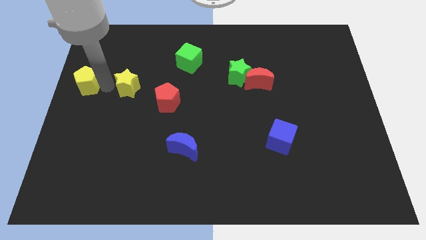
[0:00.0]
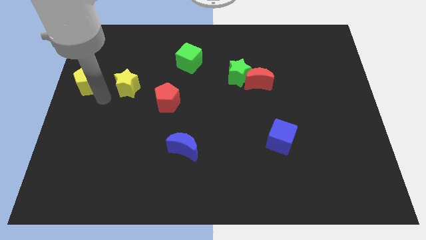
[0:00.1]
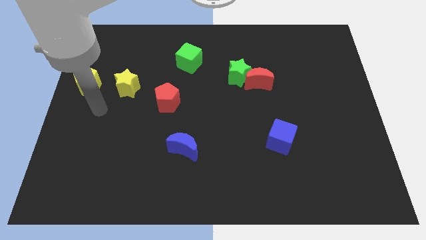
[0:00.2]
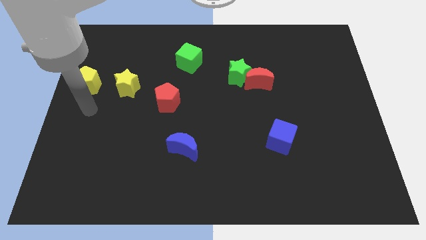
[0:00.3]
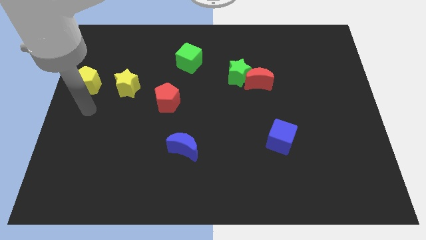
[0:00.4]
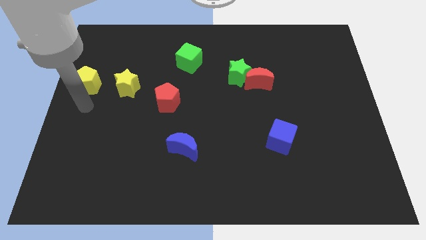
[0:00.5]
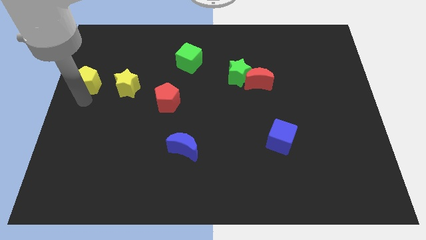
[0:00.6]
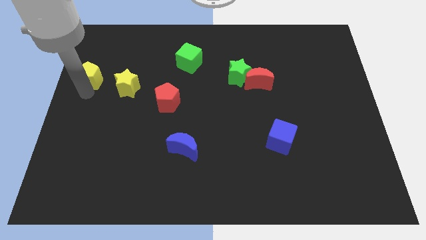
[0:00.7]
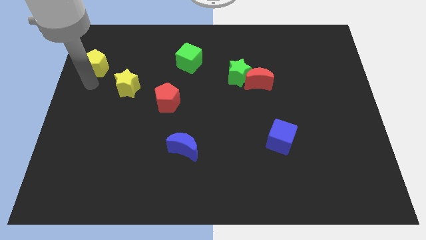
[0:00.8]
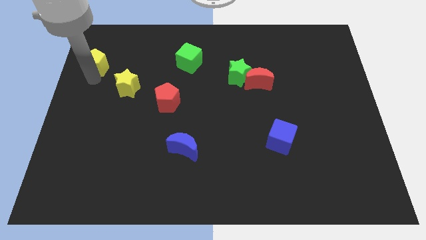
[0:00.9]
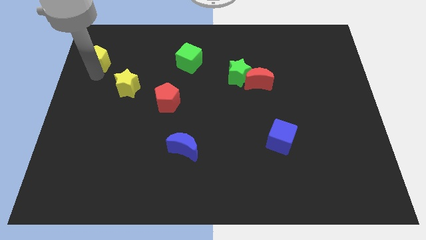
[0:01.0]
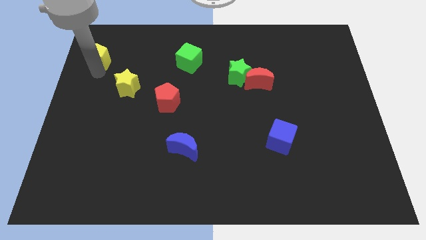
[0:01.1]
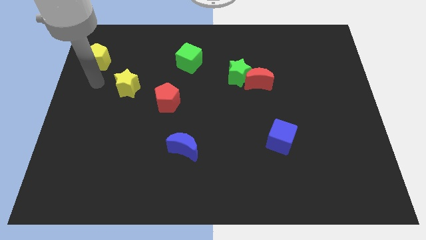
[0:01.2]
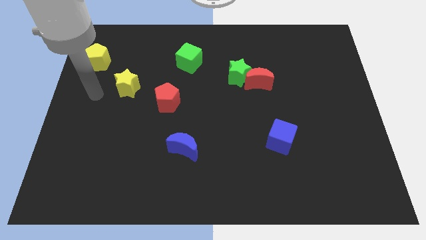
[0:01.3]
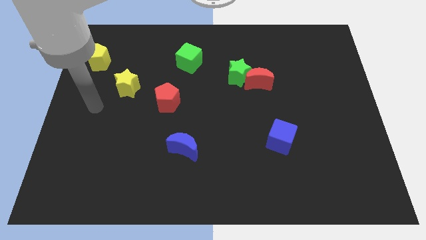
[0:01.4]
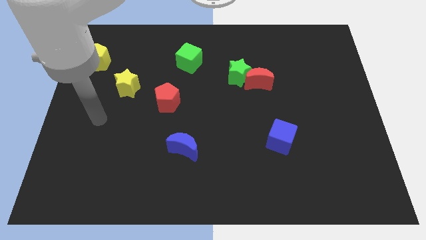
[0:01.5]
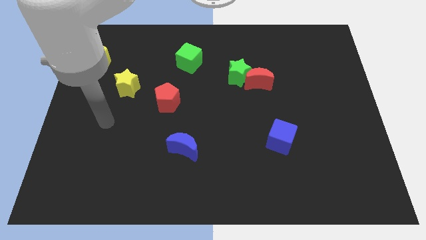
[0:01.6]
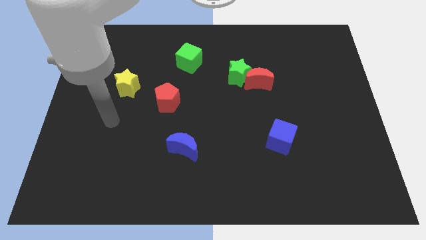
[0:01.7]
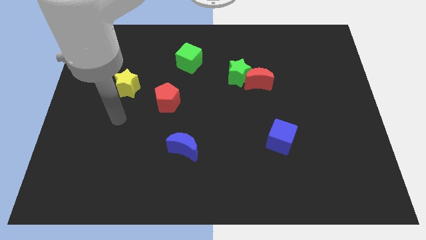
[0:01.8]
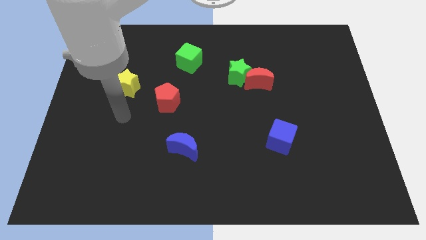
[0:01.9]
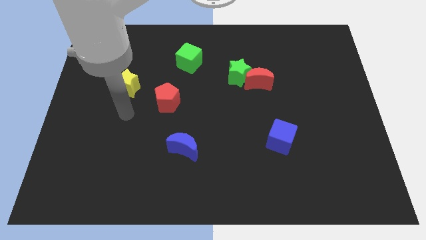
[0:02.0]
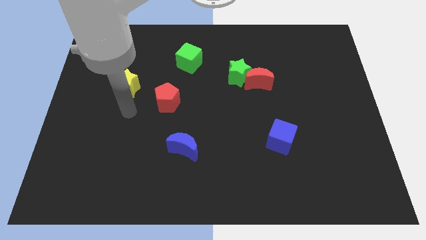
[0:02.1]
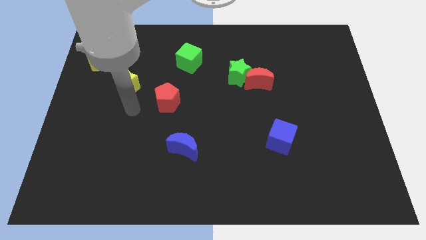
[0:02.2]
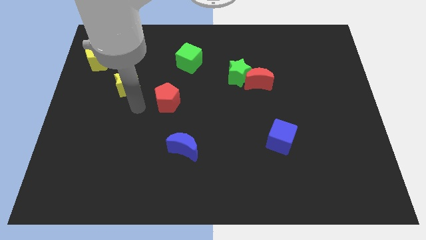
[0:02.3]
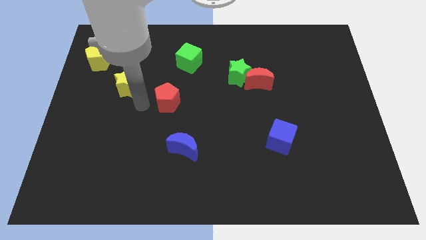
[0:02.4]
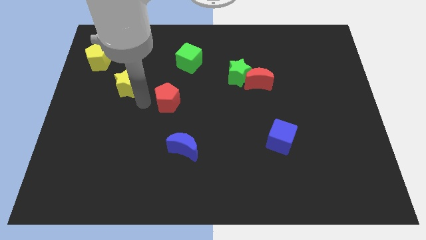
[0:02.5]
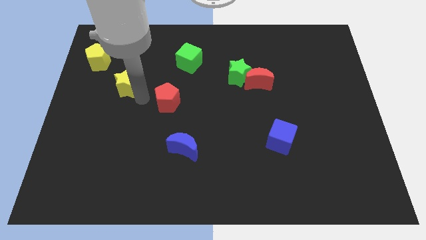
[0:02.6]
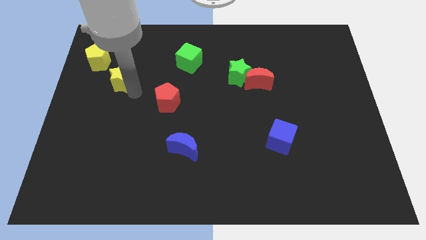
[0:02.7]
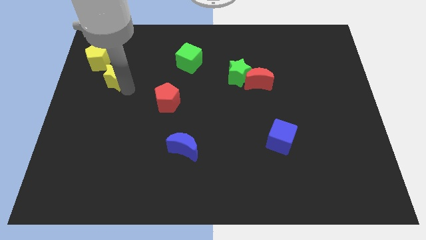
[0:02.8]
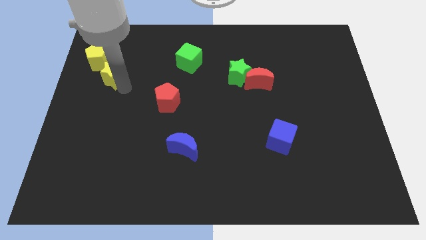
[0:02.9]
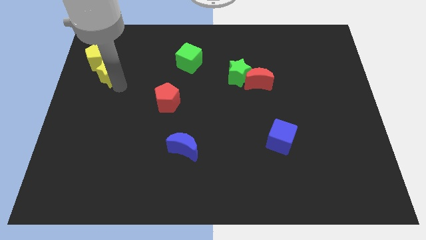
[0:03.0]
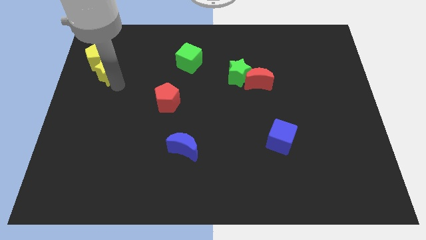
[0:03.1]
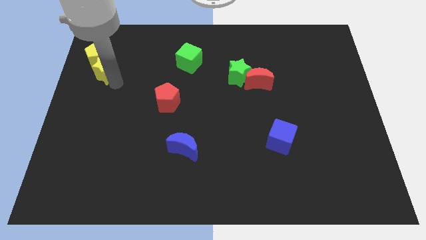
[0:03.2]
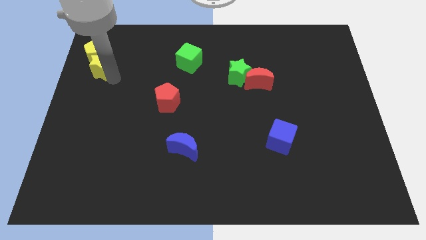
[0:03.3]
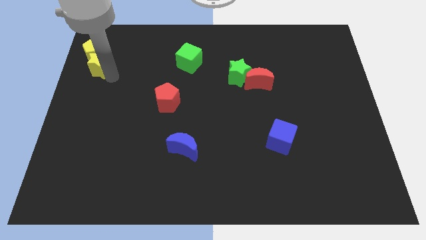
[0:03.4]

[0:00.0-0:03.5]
move the yellow blocks to the left of the green cube

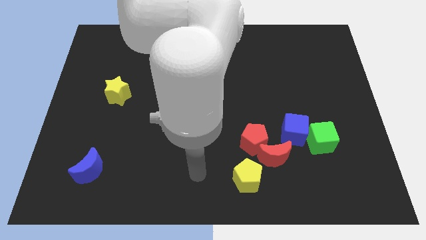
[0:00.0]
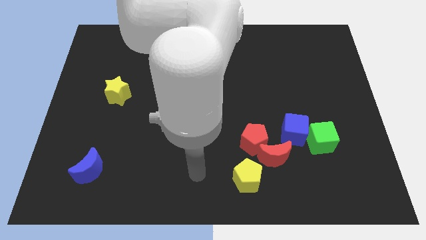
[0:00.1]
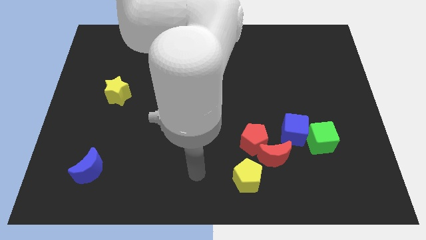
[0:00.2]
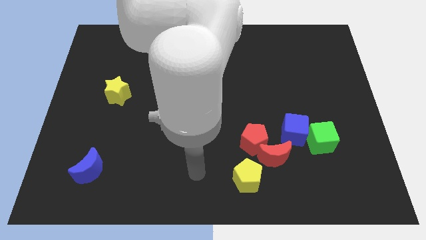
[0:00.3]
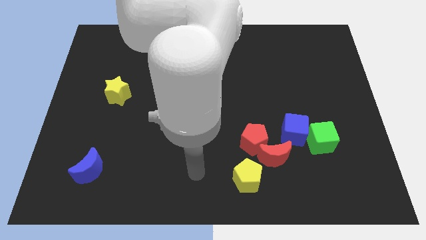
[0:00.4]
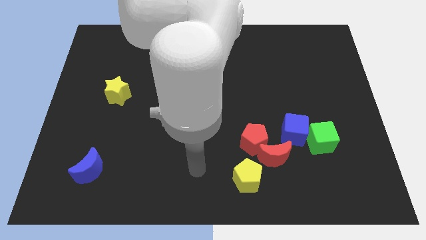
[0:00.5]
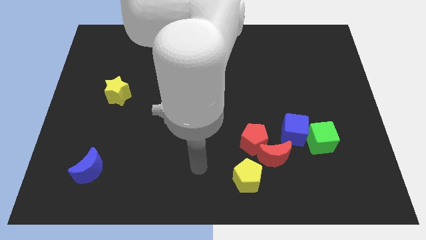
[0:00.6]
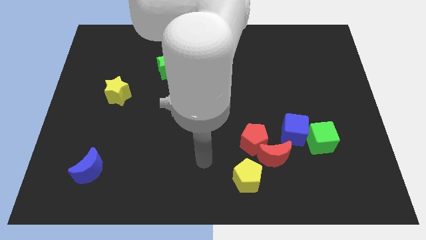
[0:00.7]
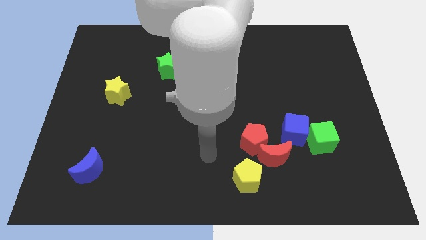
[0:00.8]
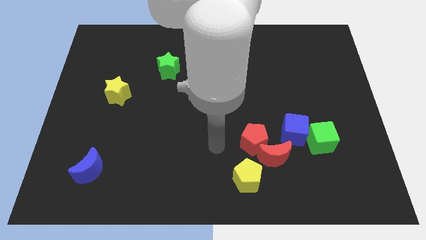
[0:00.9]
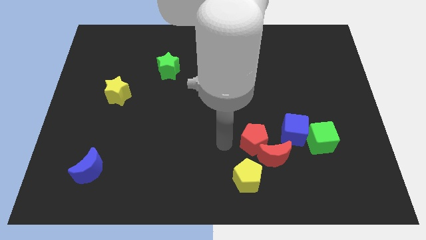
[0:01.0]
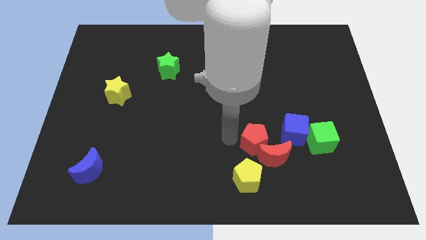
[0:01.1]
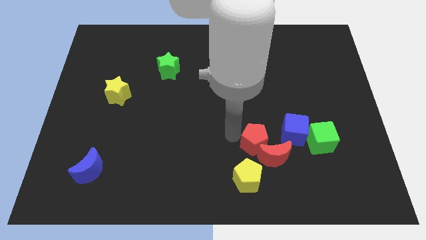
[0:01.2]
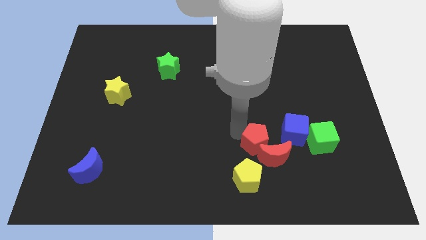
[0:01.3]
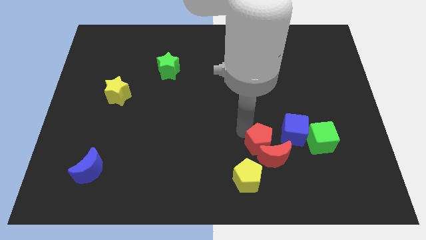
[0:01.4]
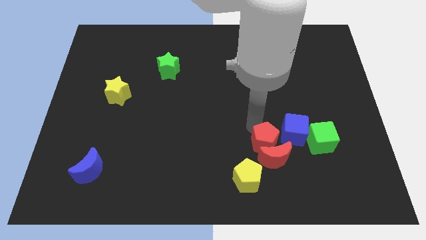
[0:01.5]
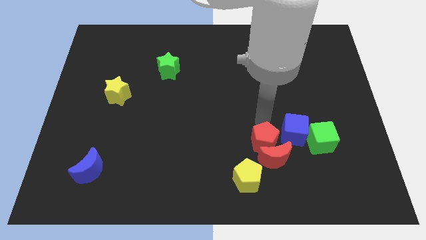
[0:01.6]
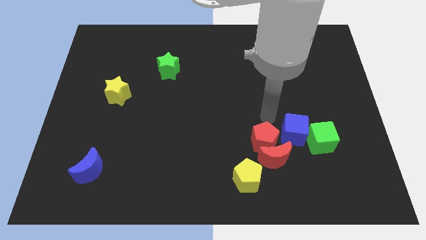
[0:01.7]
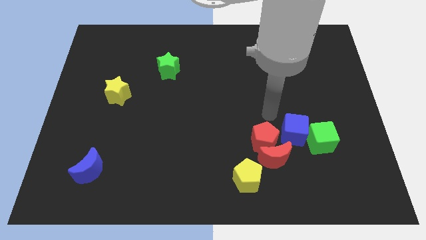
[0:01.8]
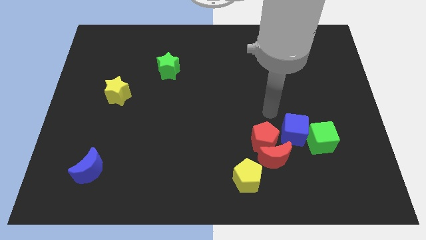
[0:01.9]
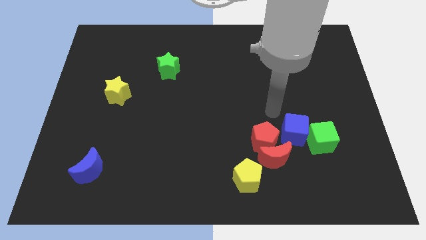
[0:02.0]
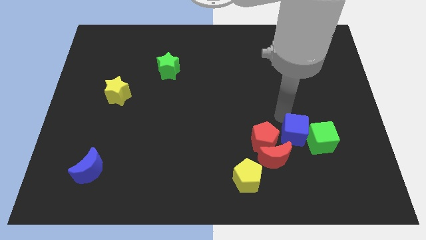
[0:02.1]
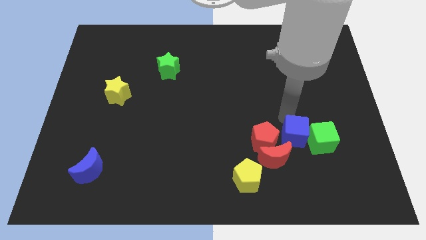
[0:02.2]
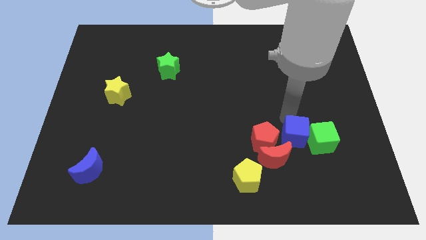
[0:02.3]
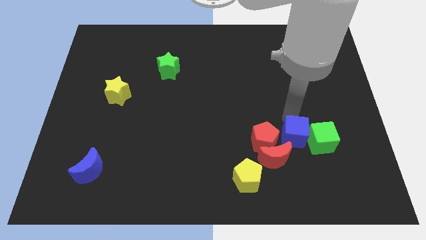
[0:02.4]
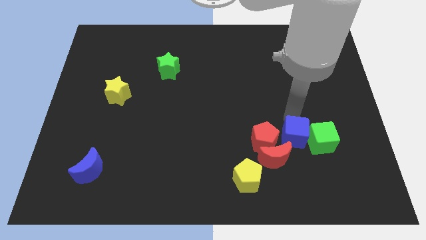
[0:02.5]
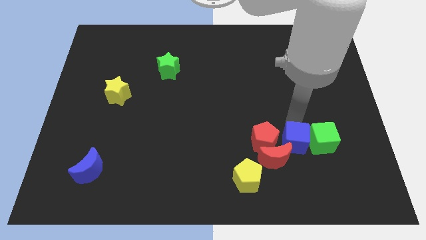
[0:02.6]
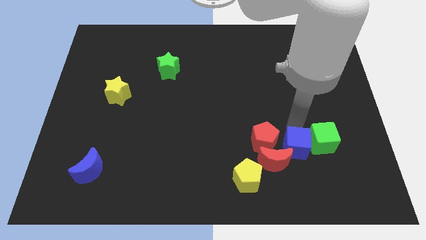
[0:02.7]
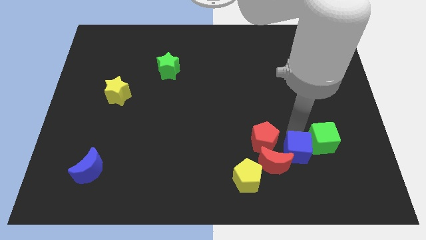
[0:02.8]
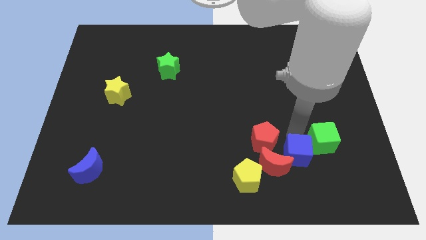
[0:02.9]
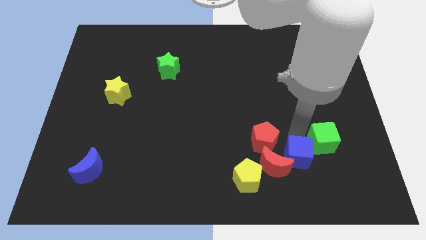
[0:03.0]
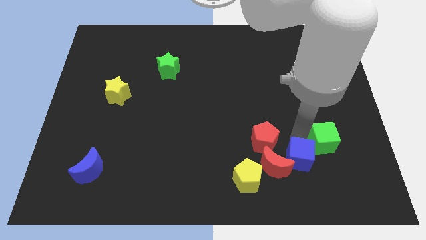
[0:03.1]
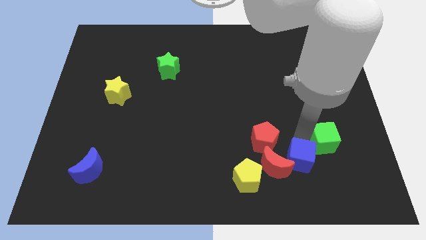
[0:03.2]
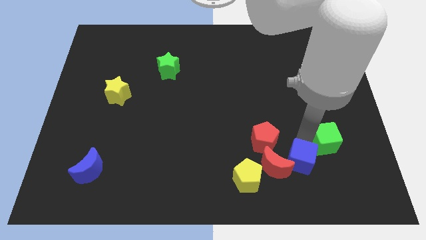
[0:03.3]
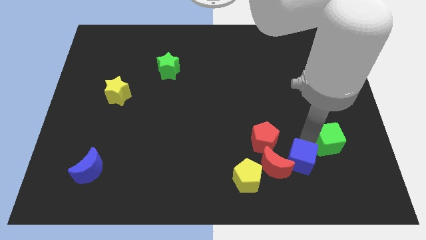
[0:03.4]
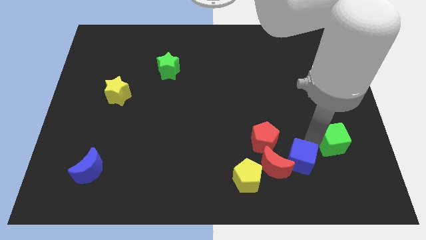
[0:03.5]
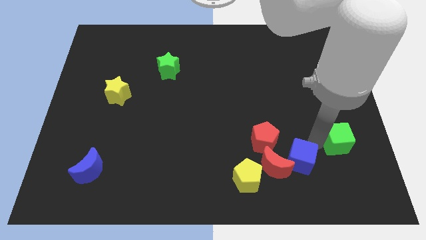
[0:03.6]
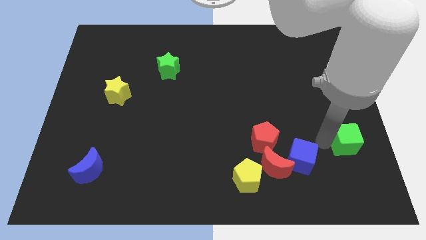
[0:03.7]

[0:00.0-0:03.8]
move the arm to the blue cube

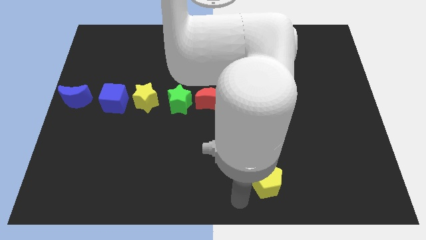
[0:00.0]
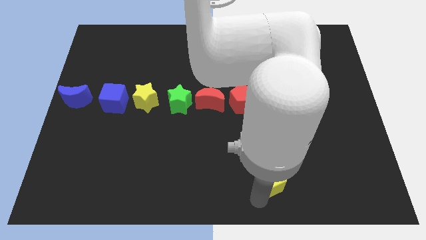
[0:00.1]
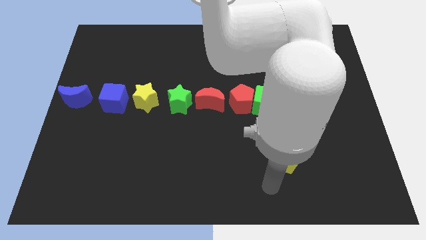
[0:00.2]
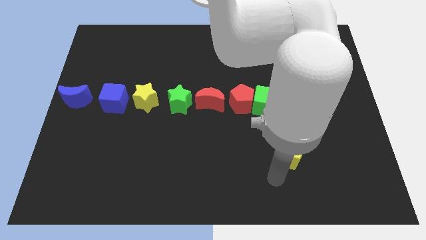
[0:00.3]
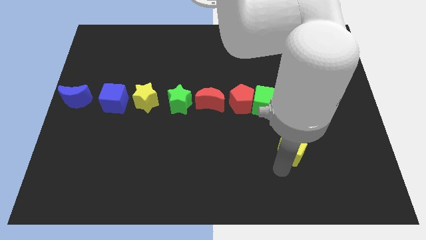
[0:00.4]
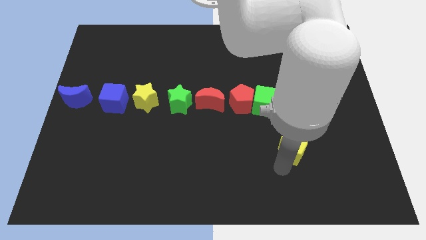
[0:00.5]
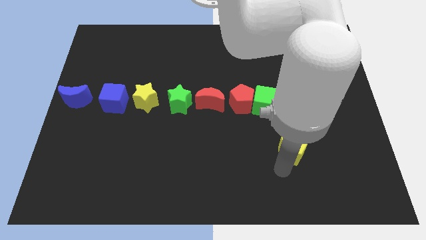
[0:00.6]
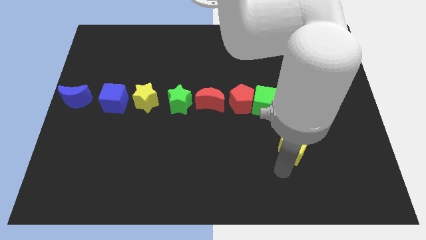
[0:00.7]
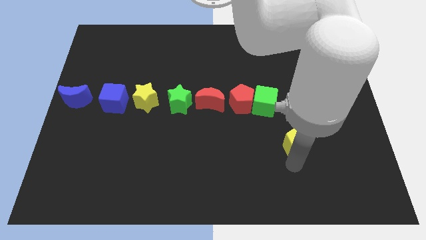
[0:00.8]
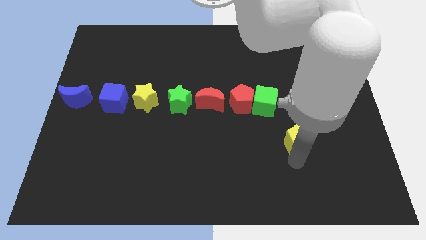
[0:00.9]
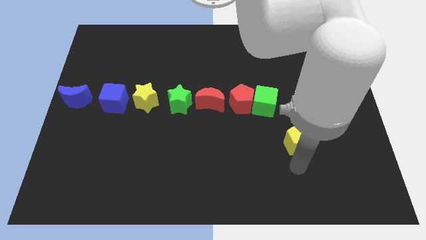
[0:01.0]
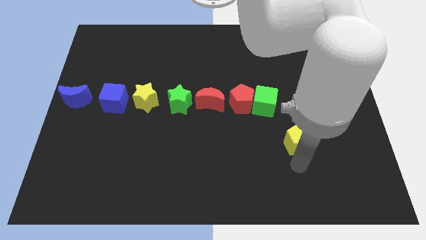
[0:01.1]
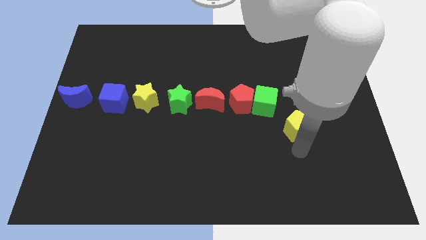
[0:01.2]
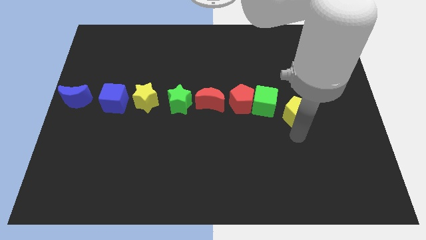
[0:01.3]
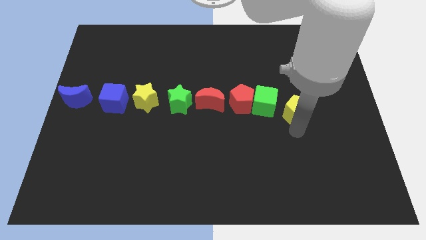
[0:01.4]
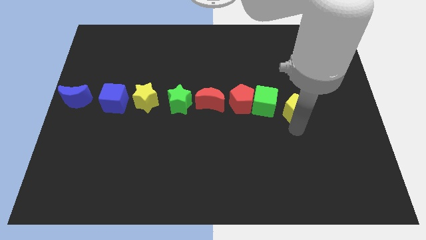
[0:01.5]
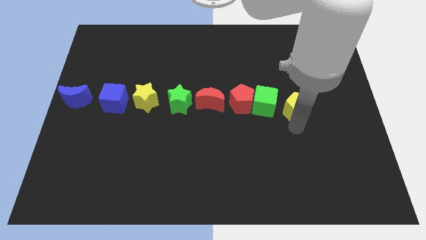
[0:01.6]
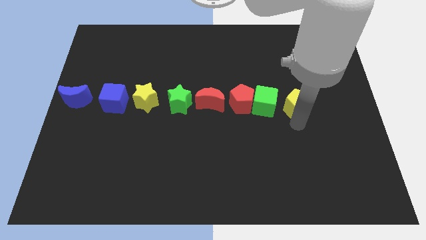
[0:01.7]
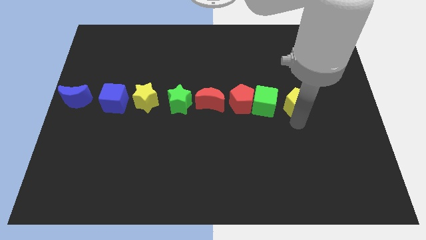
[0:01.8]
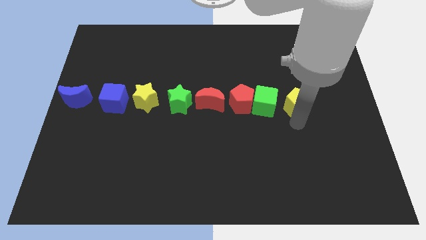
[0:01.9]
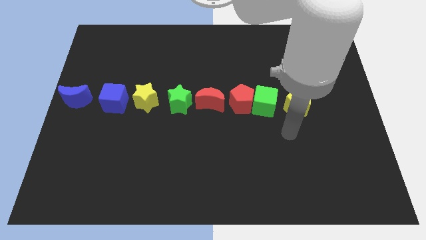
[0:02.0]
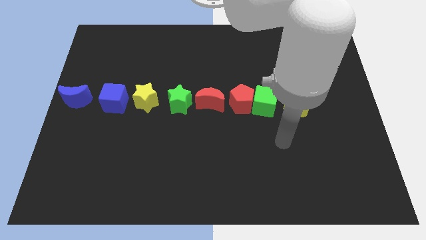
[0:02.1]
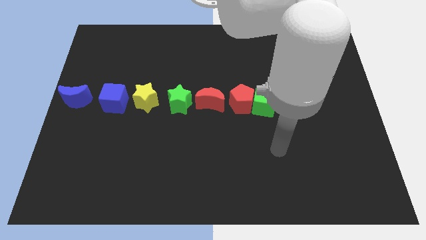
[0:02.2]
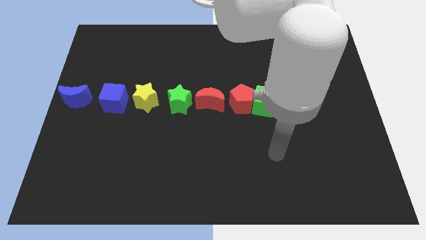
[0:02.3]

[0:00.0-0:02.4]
place the yellow pentagon towards right to the green cube
